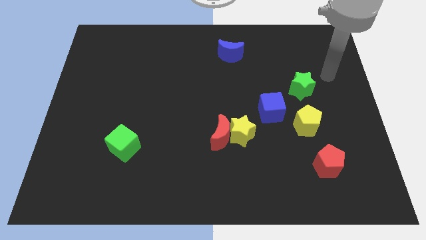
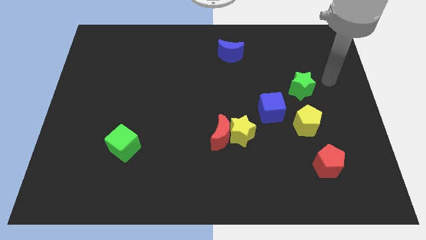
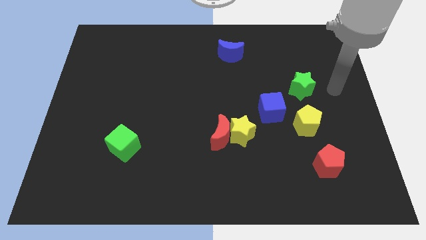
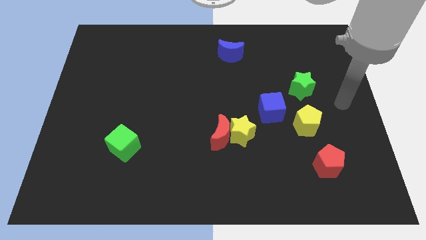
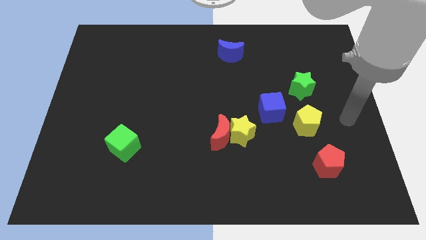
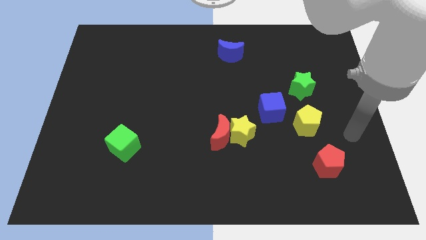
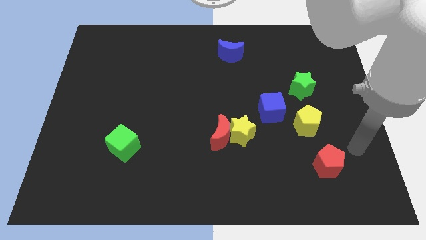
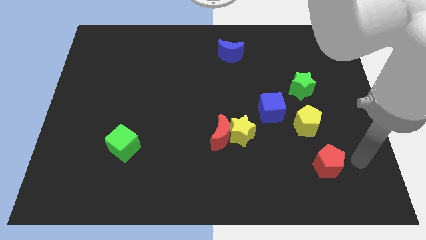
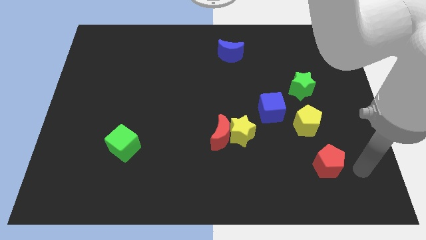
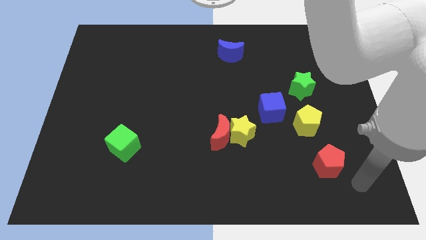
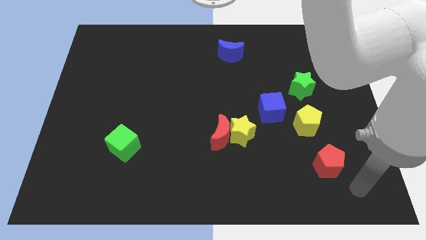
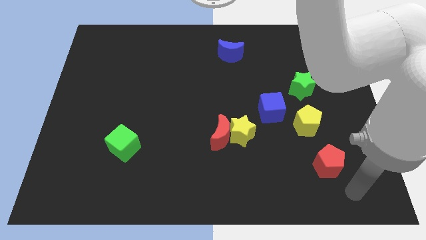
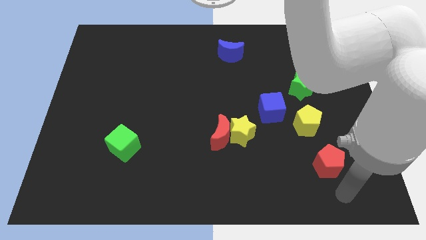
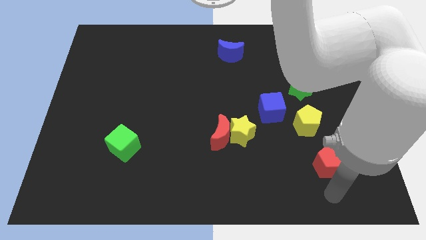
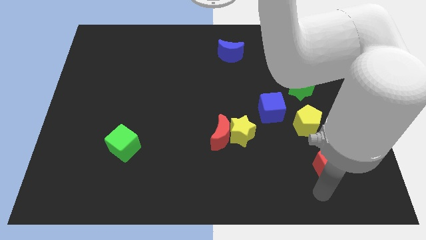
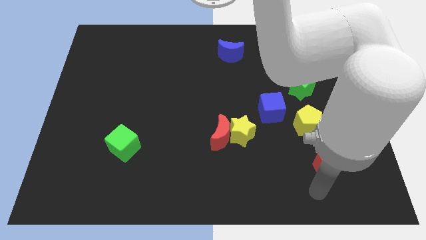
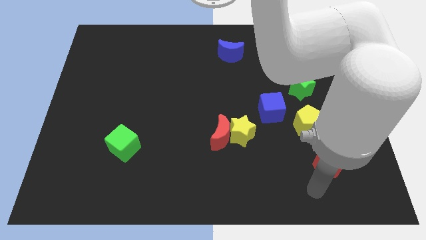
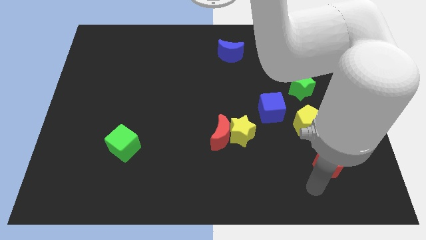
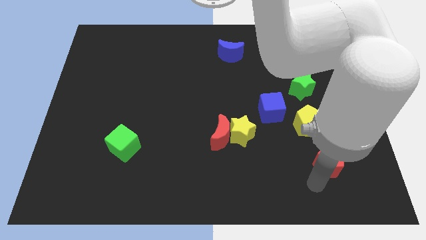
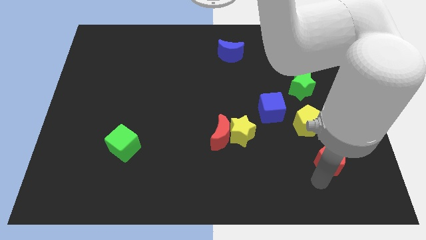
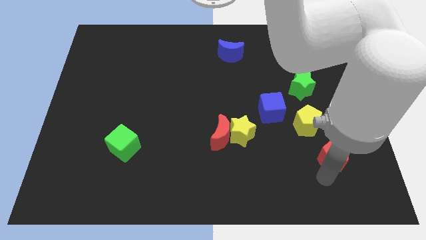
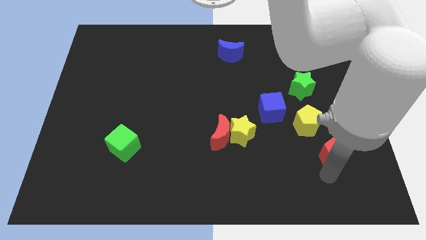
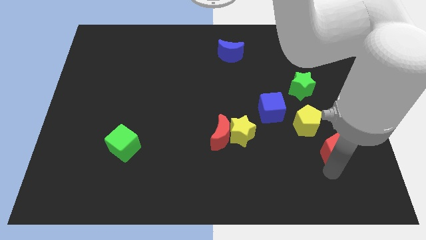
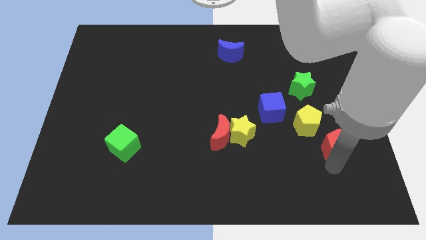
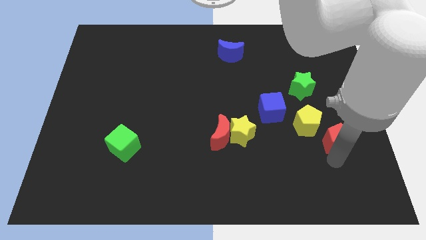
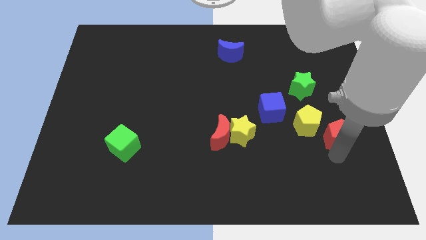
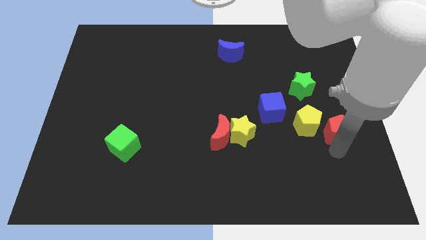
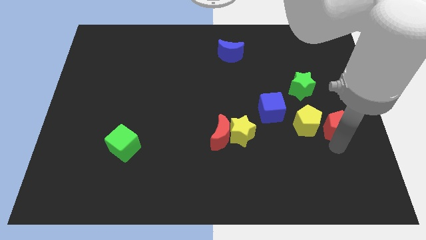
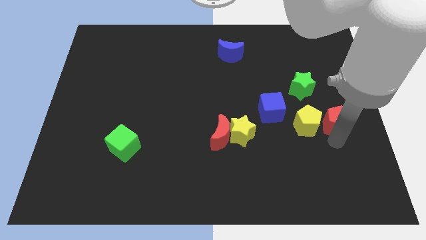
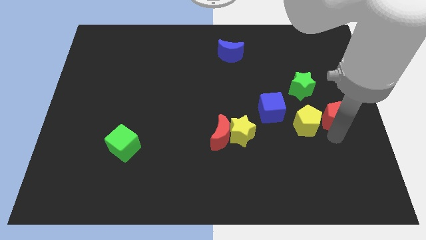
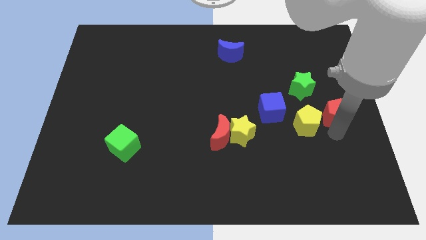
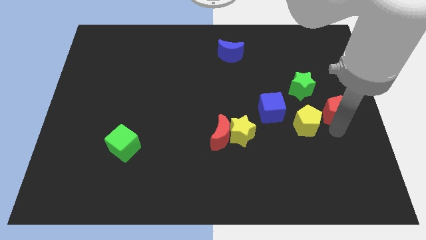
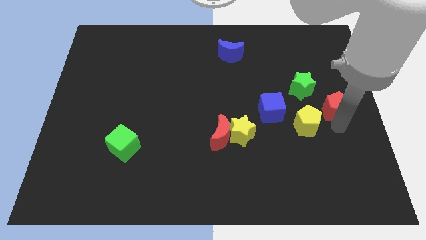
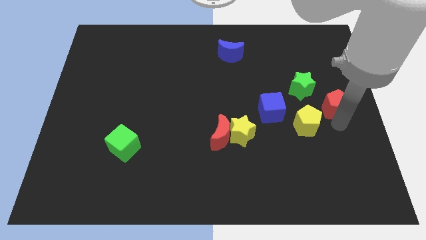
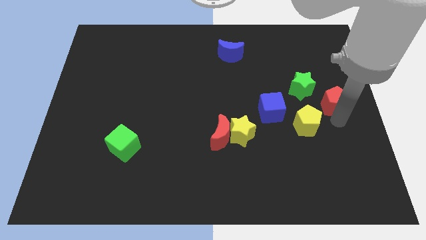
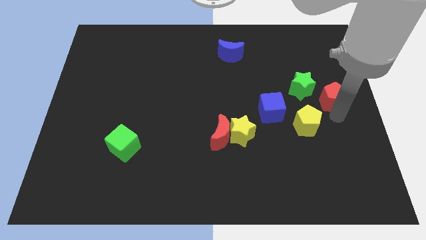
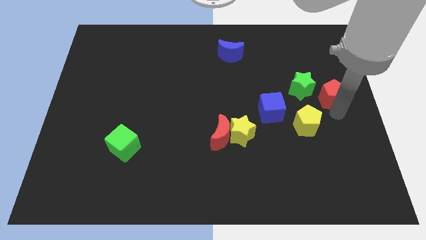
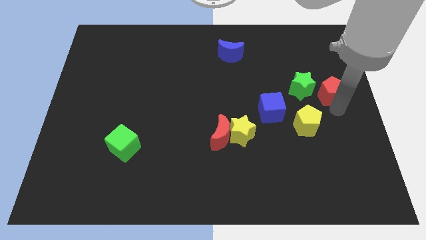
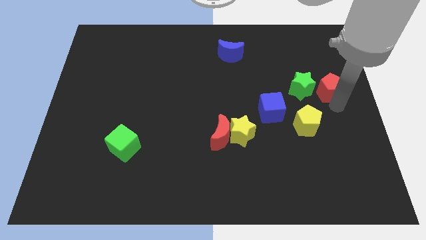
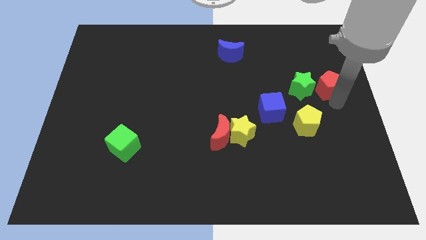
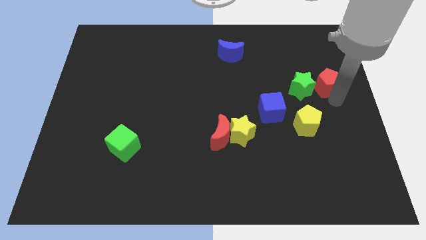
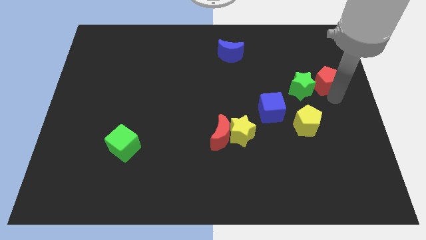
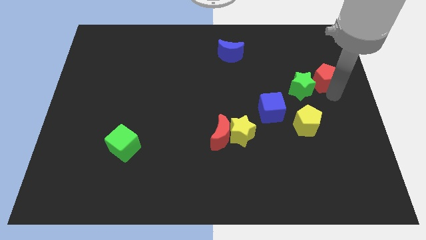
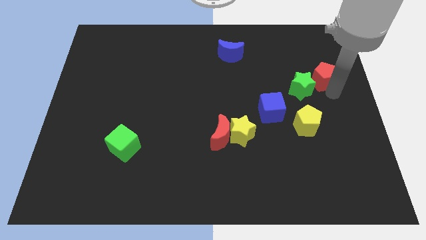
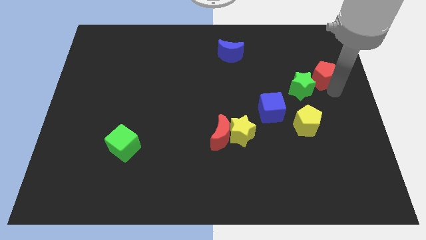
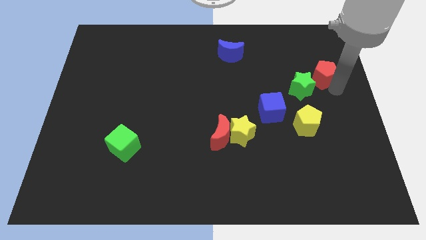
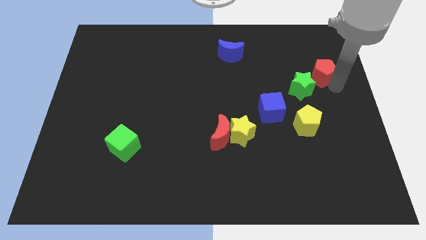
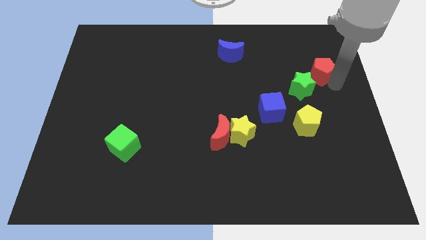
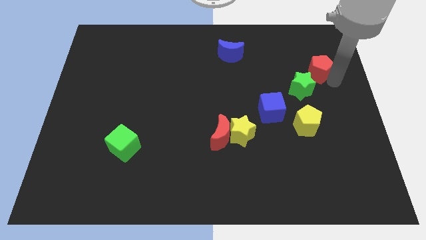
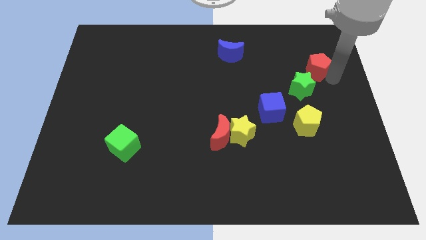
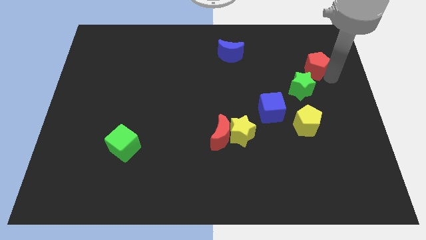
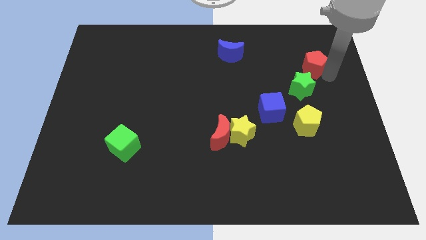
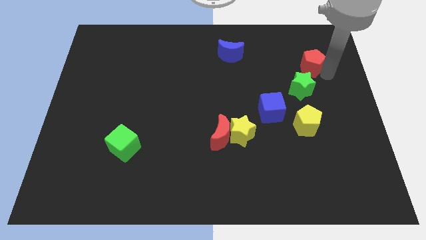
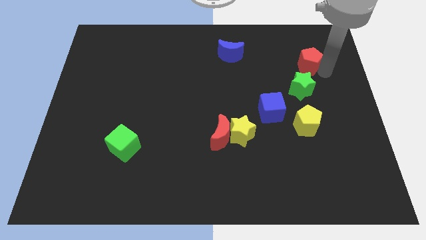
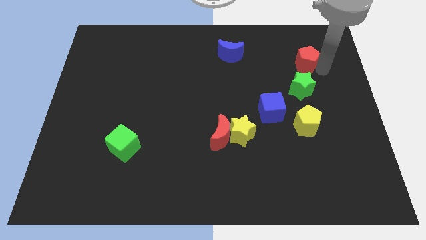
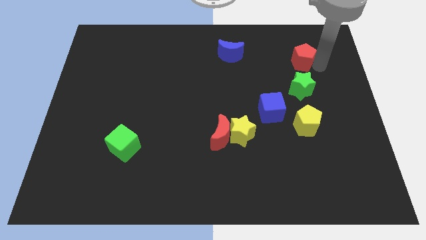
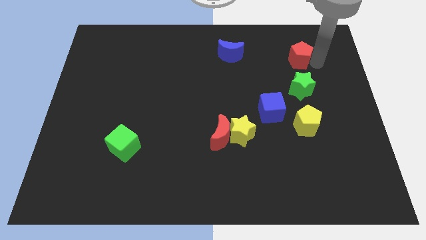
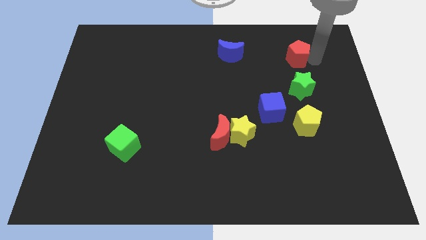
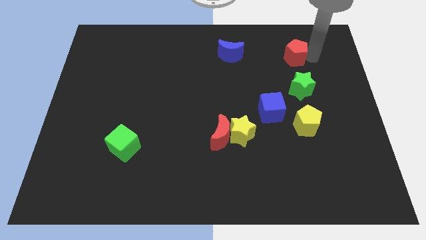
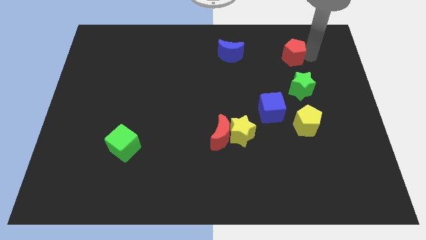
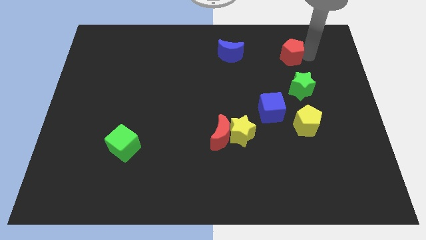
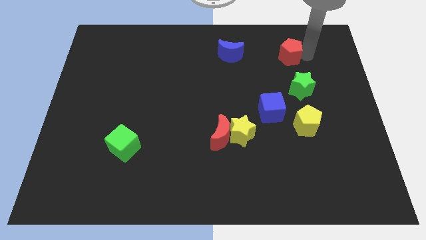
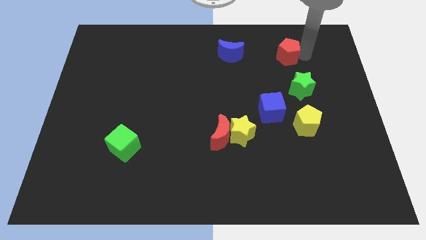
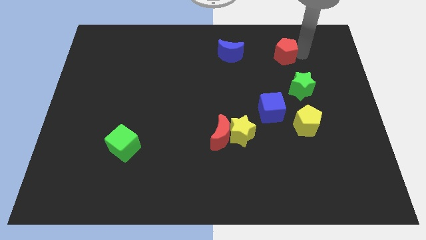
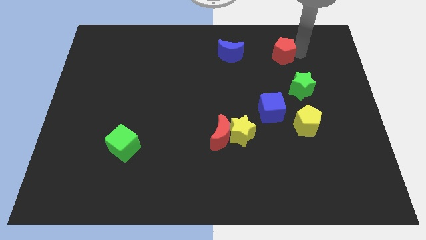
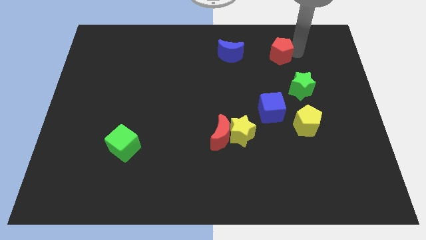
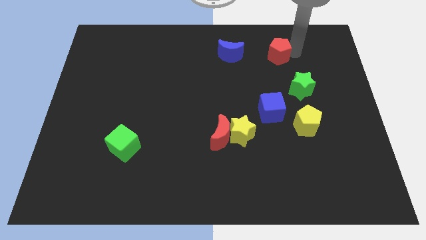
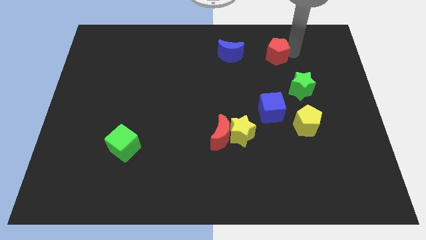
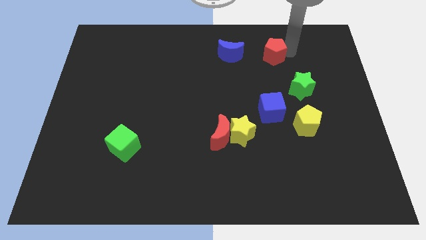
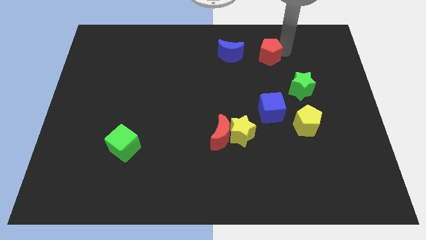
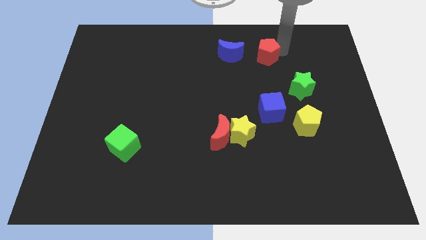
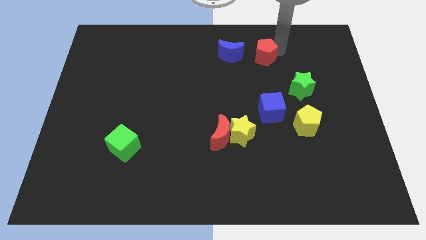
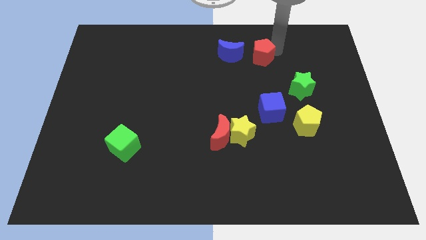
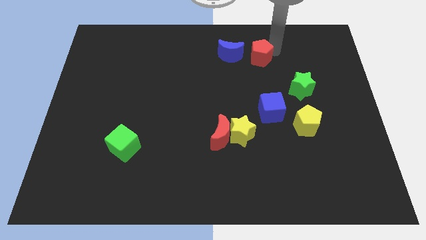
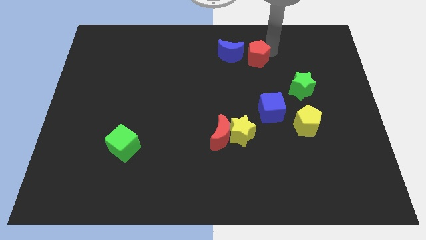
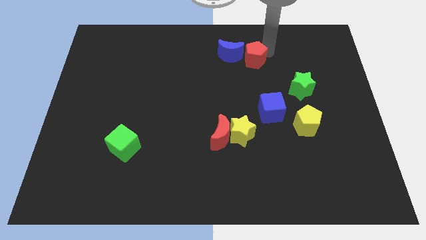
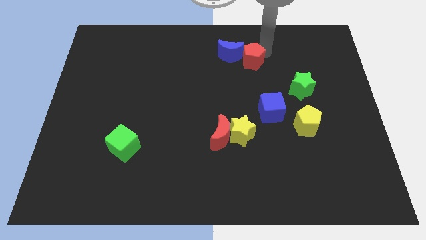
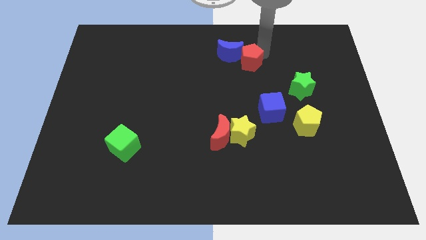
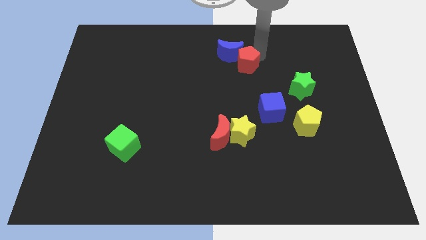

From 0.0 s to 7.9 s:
put the red pentagon towards the blue moon

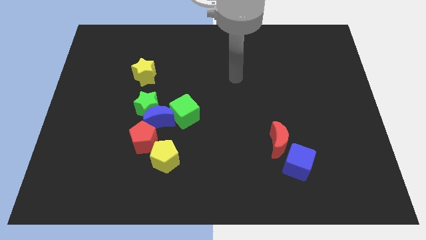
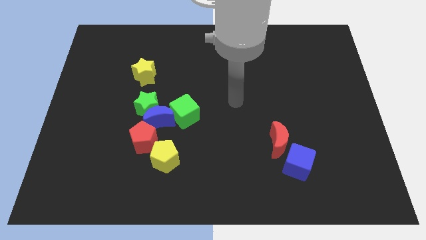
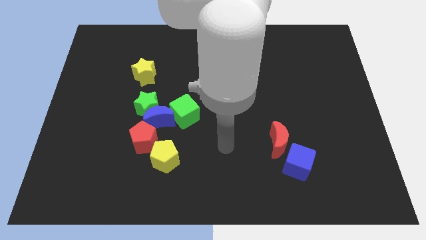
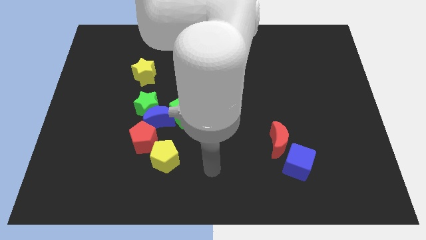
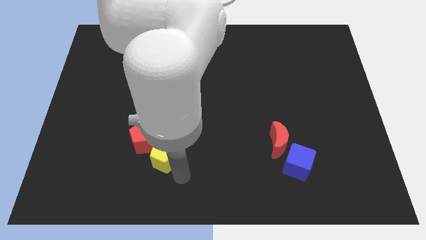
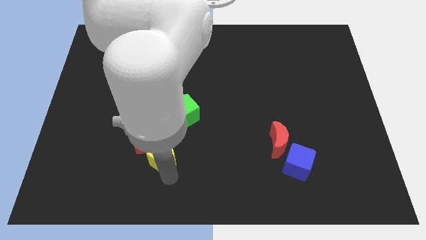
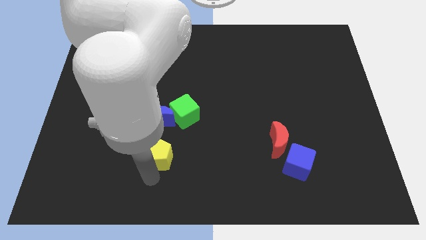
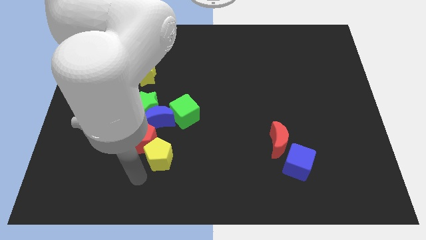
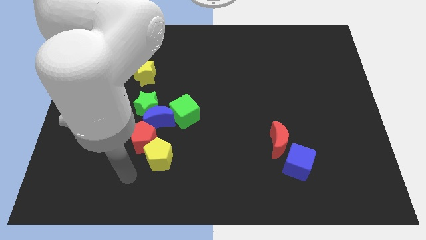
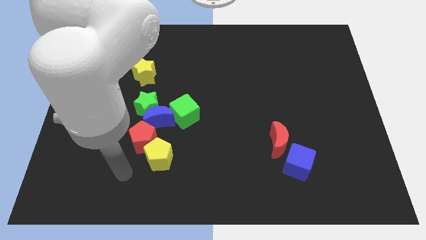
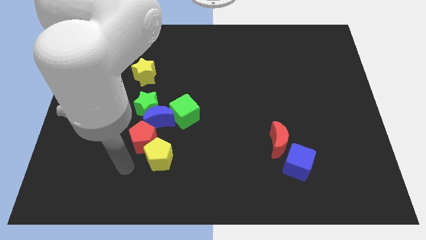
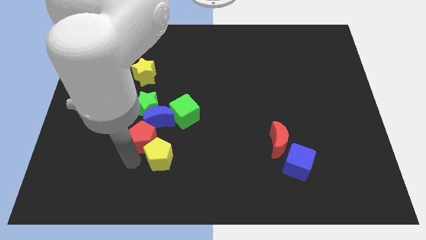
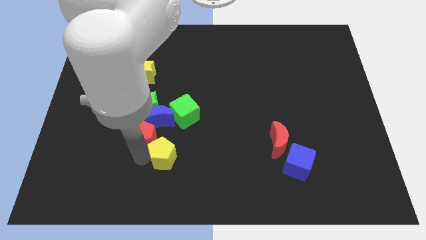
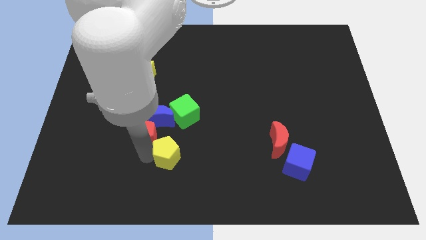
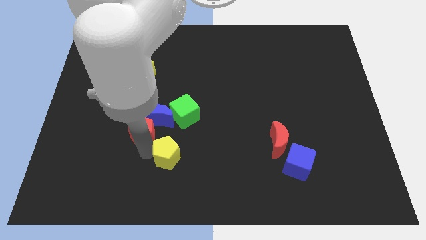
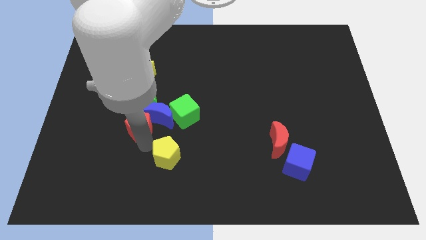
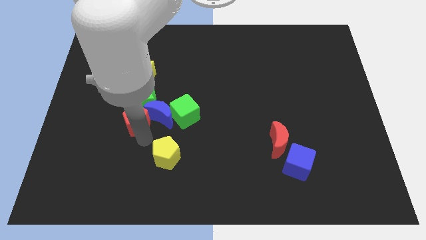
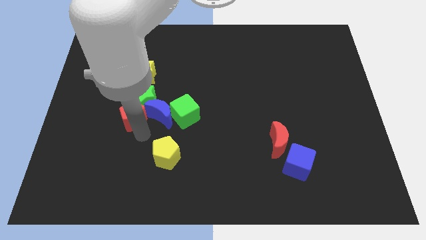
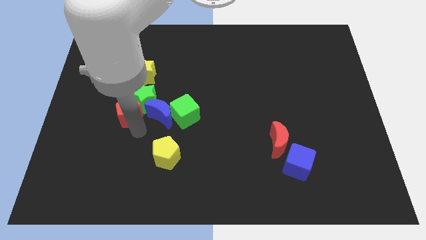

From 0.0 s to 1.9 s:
put the red pentagon next to the green star
